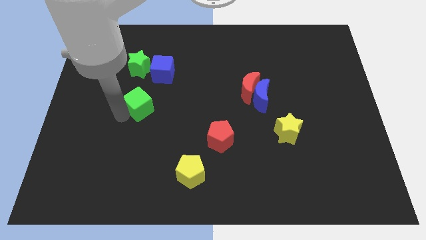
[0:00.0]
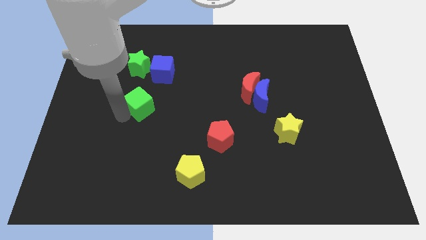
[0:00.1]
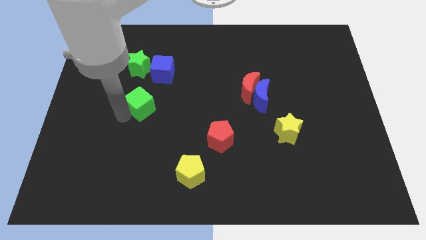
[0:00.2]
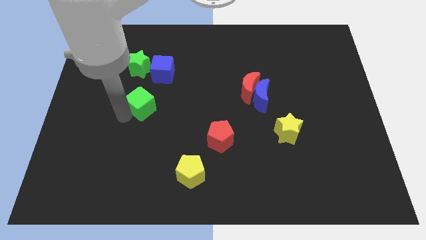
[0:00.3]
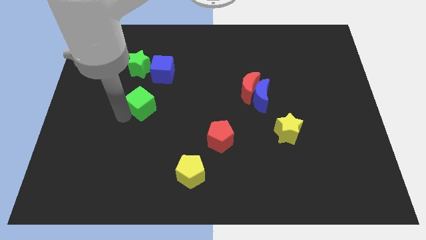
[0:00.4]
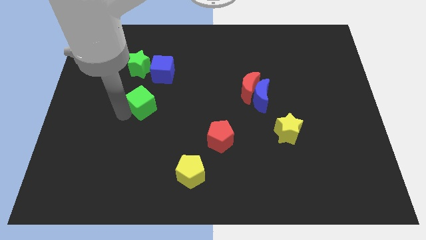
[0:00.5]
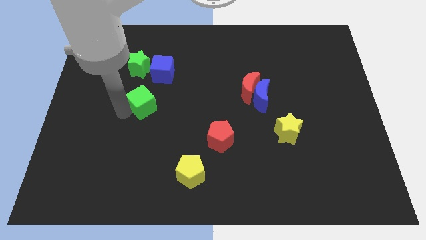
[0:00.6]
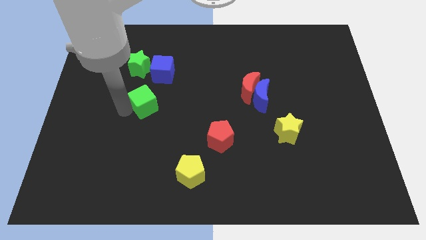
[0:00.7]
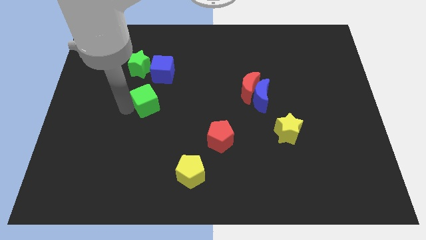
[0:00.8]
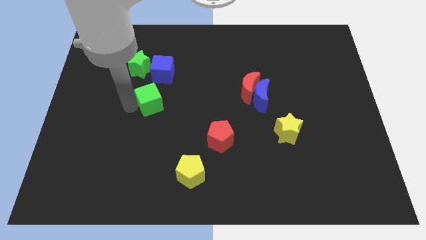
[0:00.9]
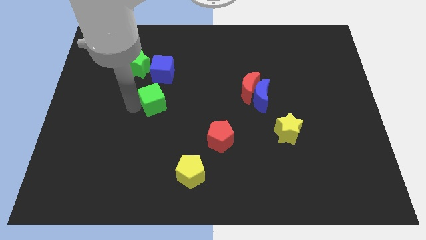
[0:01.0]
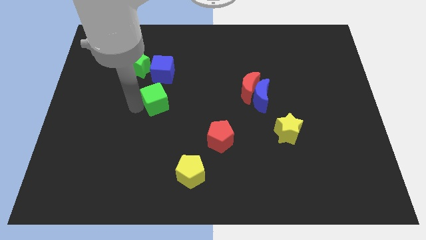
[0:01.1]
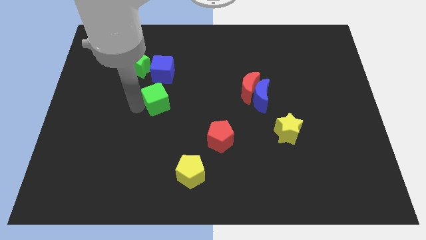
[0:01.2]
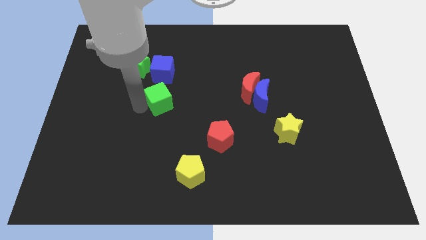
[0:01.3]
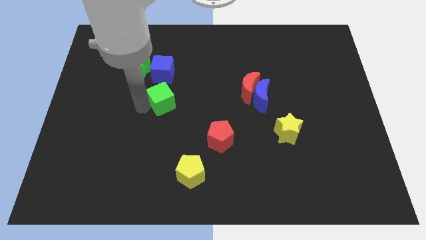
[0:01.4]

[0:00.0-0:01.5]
place green cube to the bottom of blue cube

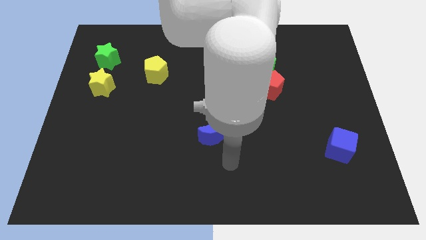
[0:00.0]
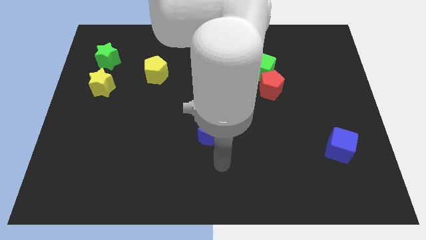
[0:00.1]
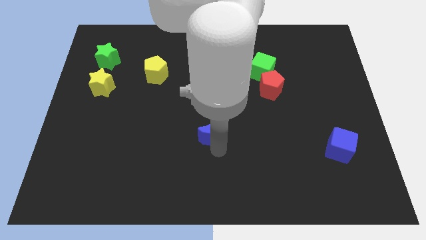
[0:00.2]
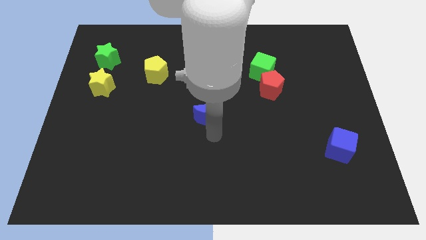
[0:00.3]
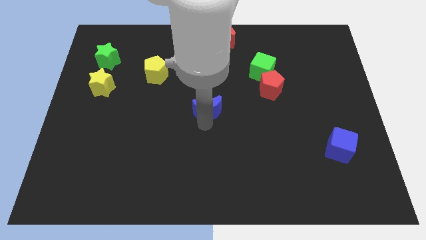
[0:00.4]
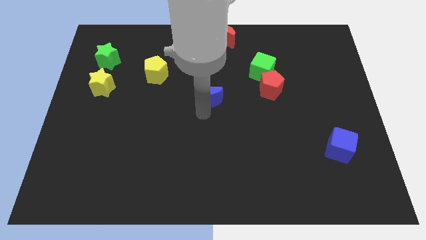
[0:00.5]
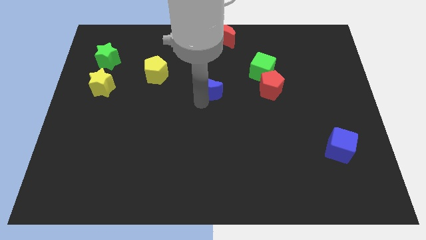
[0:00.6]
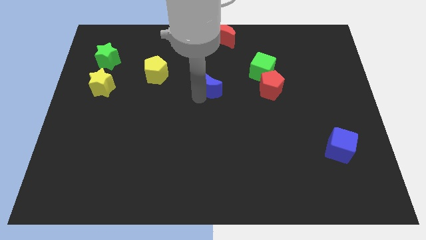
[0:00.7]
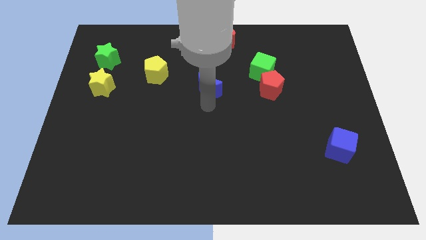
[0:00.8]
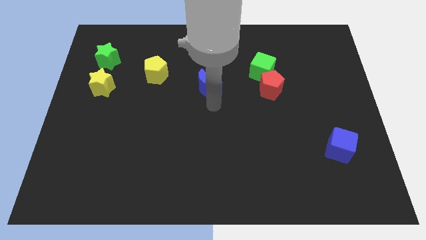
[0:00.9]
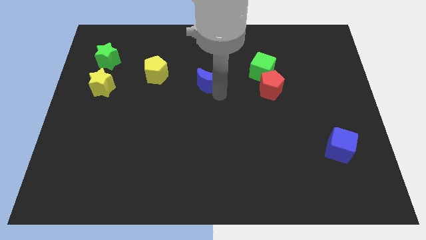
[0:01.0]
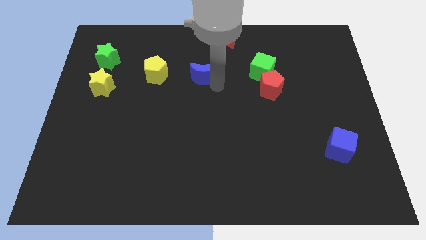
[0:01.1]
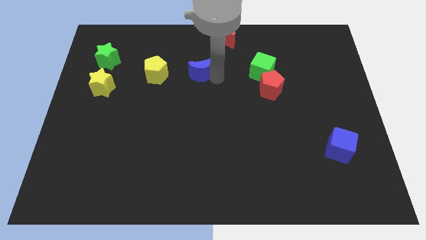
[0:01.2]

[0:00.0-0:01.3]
move the blue crescent right to the yellow pentagon

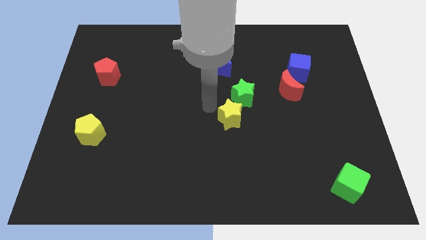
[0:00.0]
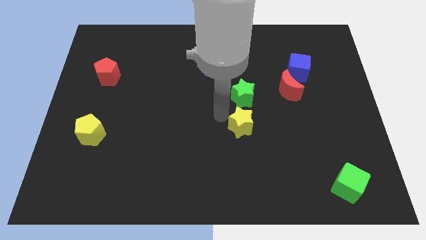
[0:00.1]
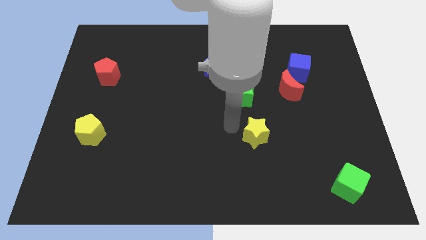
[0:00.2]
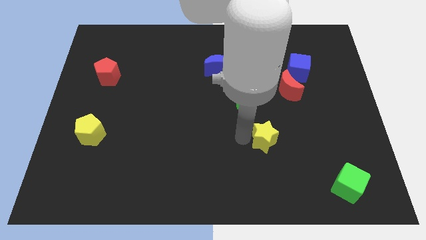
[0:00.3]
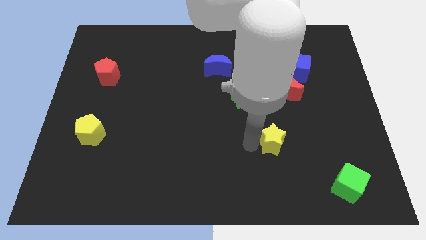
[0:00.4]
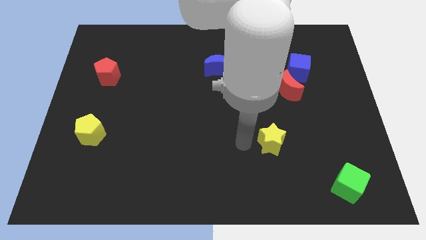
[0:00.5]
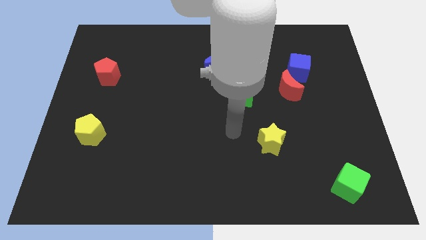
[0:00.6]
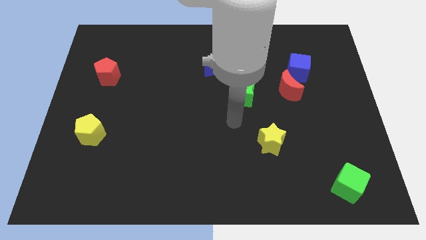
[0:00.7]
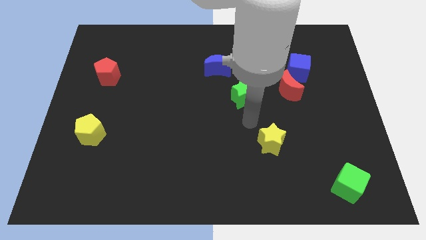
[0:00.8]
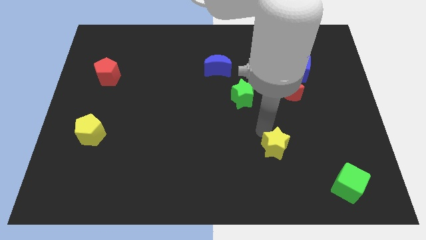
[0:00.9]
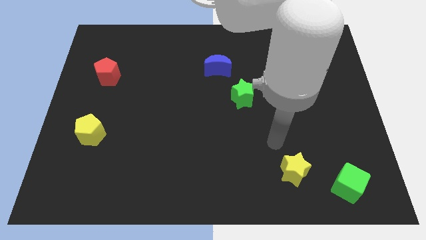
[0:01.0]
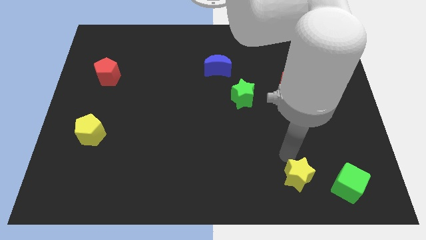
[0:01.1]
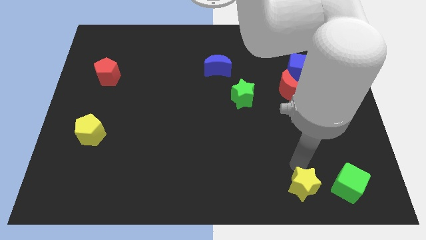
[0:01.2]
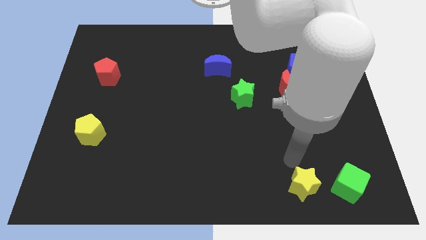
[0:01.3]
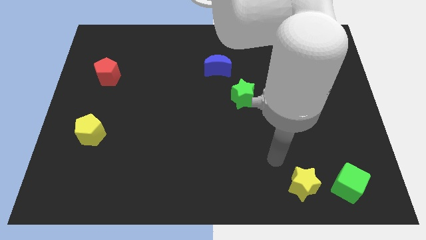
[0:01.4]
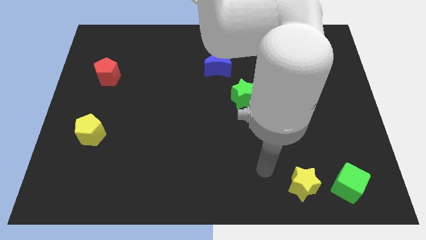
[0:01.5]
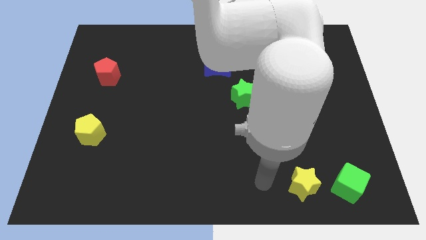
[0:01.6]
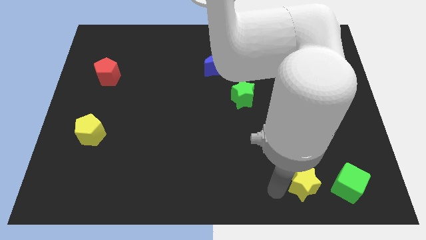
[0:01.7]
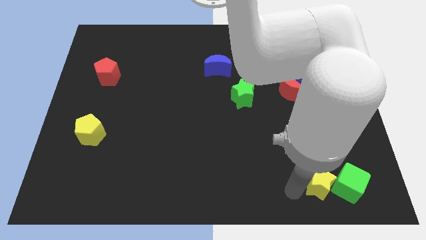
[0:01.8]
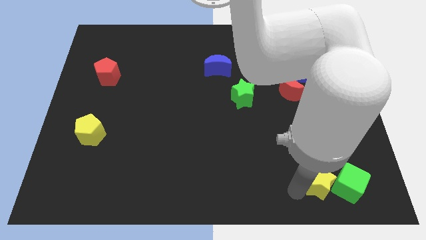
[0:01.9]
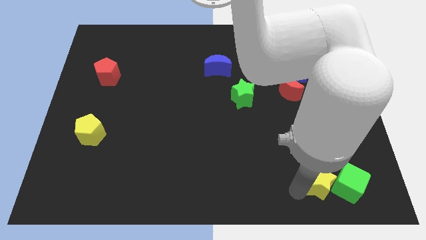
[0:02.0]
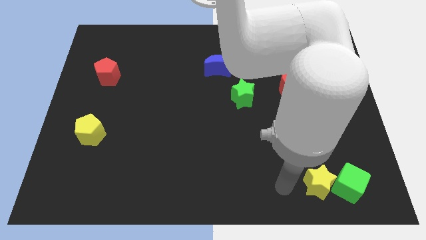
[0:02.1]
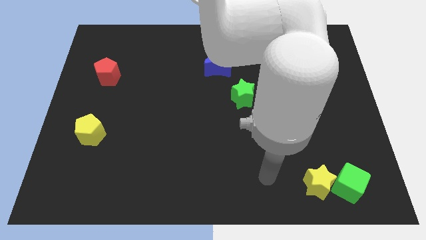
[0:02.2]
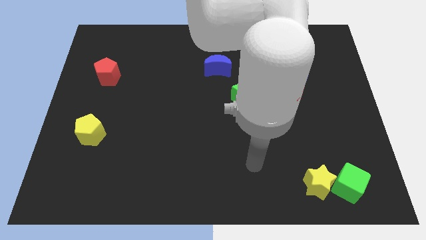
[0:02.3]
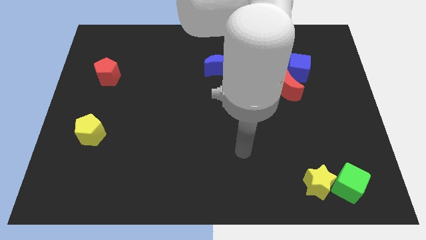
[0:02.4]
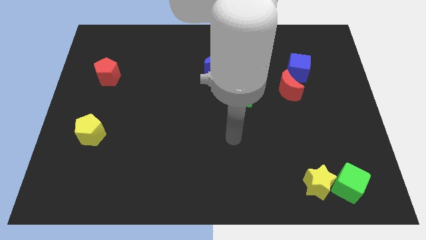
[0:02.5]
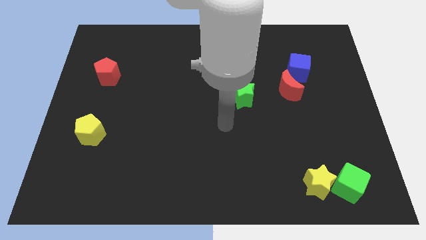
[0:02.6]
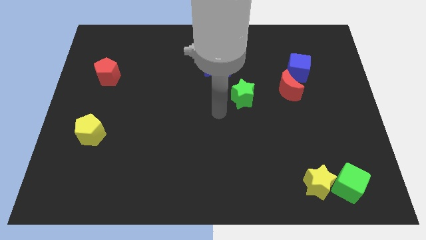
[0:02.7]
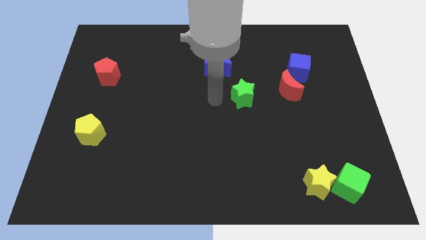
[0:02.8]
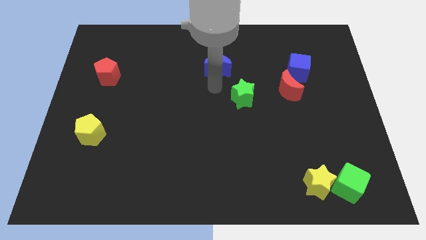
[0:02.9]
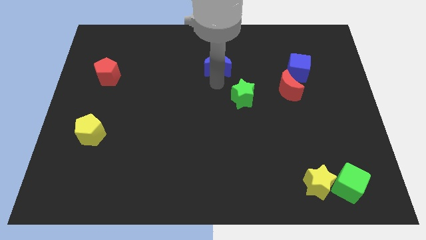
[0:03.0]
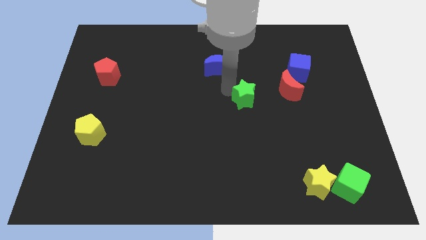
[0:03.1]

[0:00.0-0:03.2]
push the yellow star left to the green cube

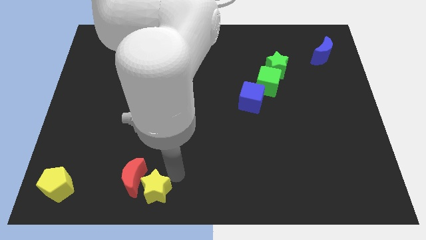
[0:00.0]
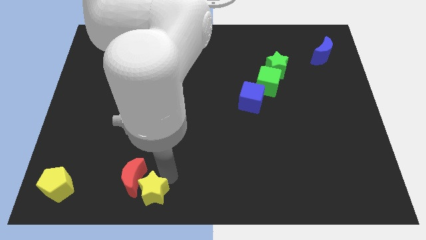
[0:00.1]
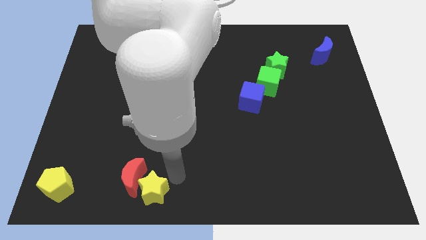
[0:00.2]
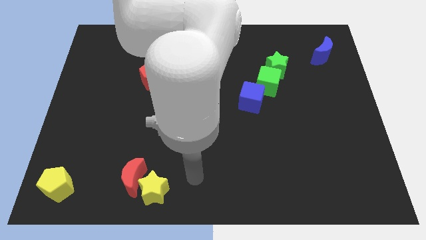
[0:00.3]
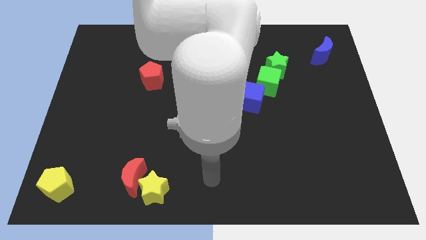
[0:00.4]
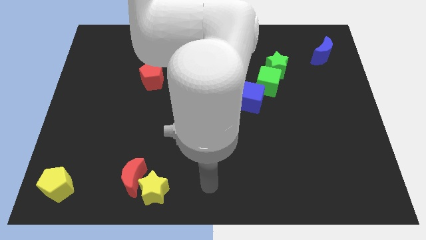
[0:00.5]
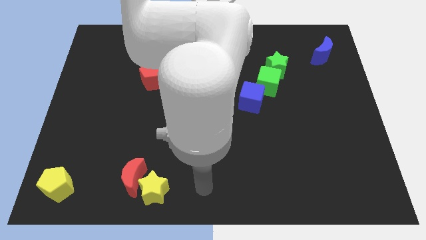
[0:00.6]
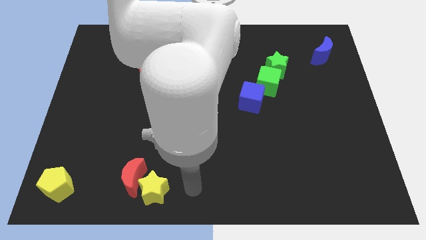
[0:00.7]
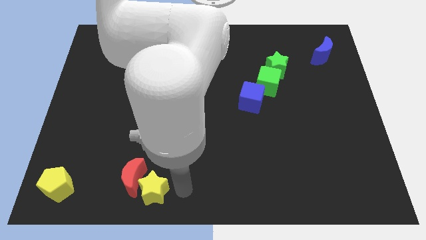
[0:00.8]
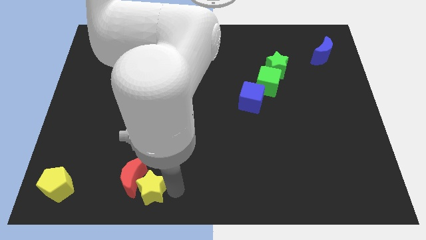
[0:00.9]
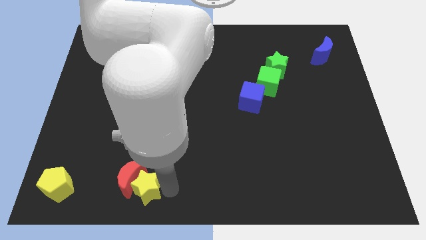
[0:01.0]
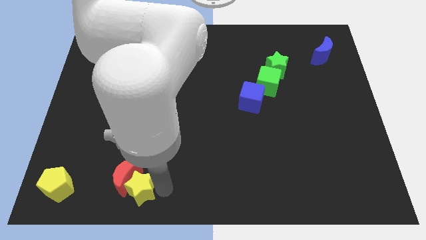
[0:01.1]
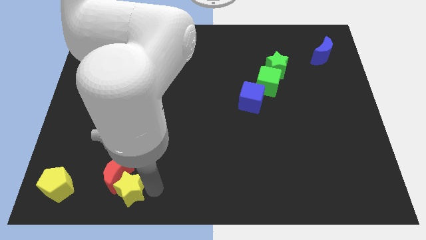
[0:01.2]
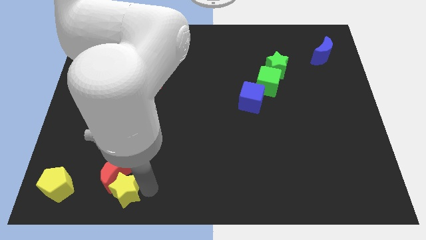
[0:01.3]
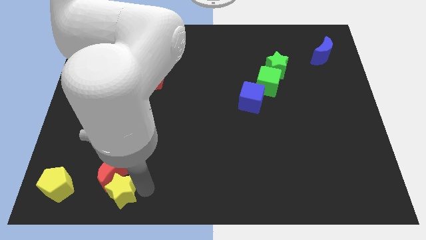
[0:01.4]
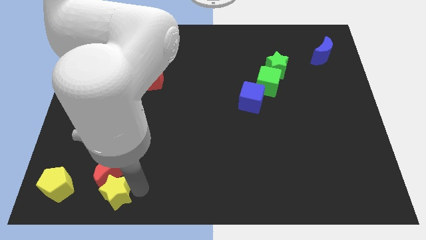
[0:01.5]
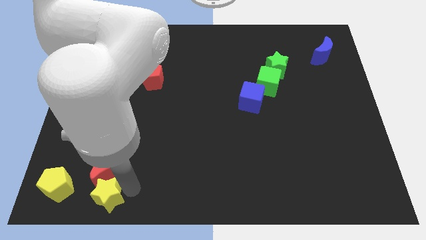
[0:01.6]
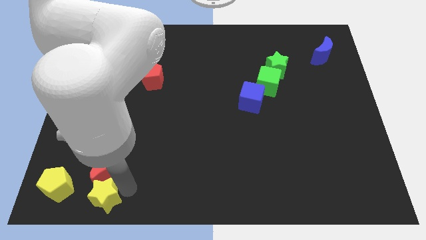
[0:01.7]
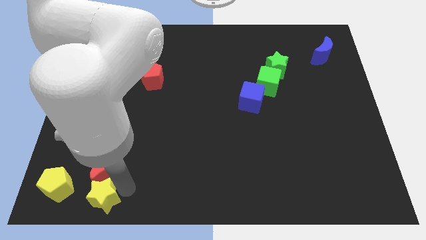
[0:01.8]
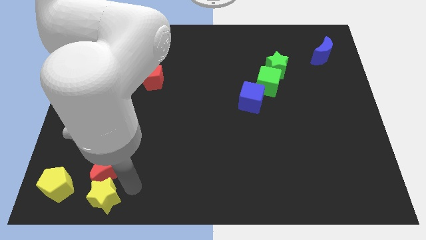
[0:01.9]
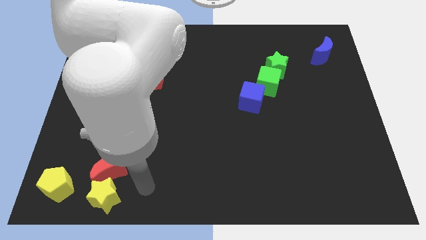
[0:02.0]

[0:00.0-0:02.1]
move the yellow star and red crescent at the right side of the yellow pentagon

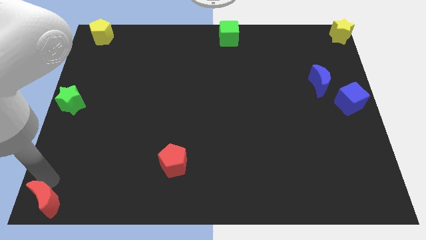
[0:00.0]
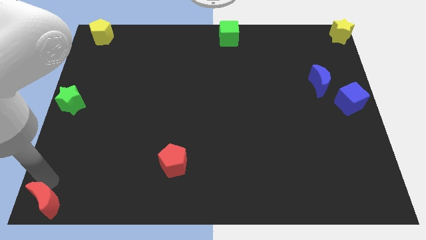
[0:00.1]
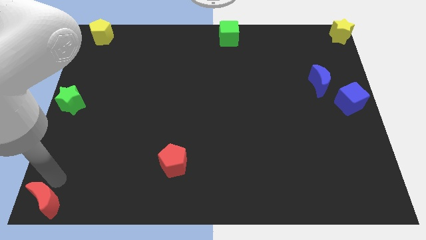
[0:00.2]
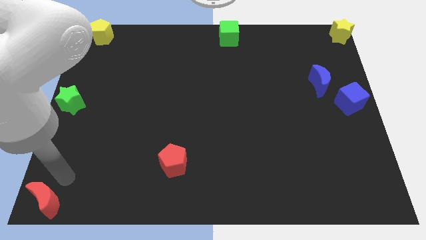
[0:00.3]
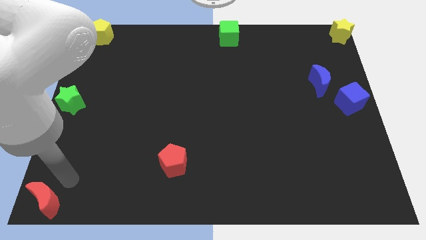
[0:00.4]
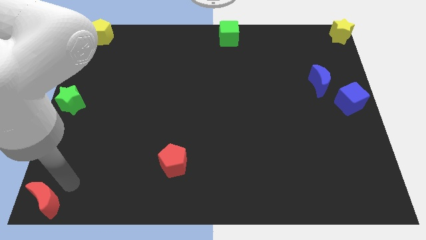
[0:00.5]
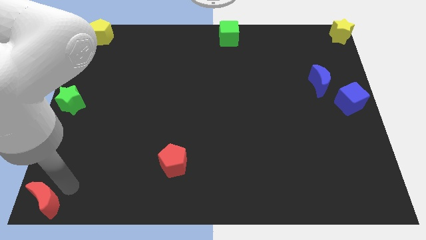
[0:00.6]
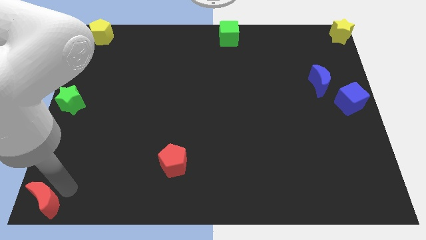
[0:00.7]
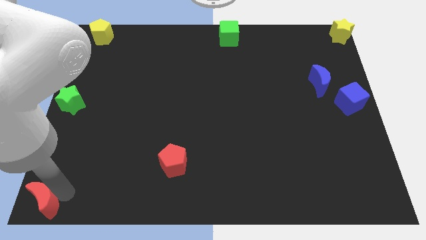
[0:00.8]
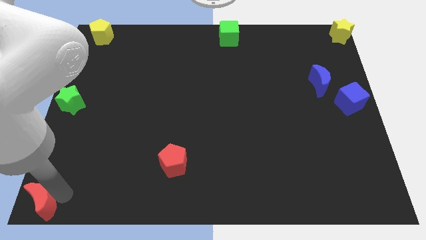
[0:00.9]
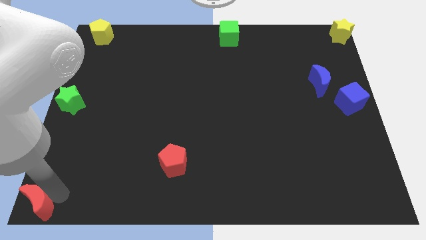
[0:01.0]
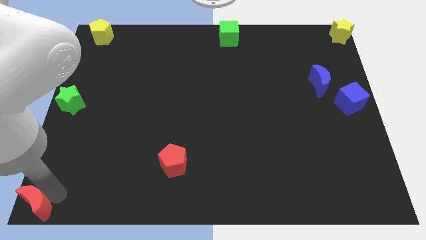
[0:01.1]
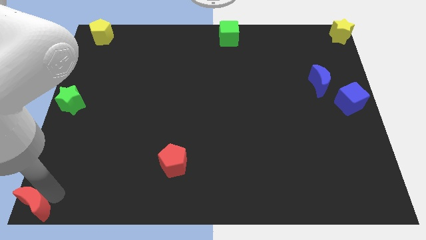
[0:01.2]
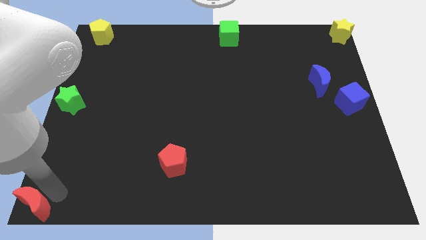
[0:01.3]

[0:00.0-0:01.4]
move the red crescent bottom left to the board
